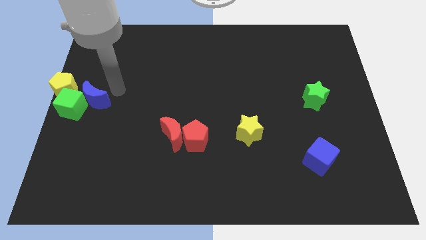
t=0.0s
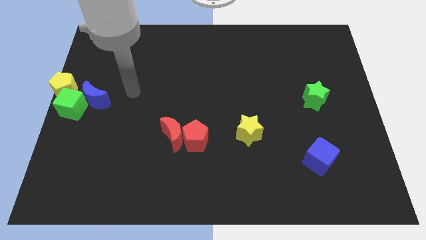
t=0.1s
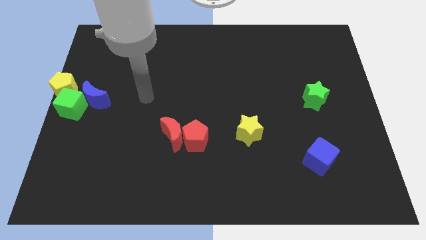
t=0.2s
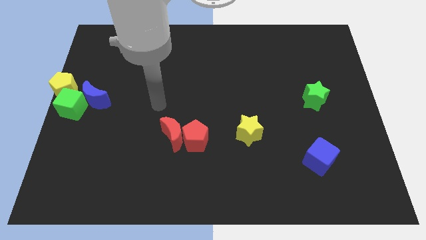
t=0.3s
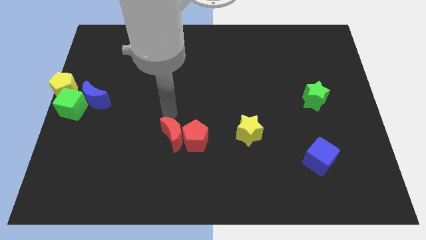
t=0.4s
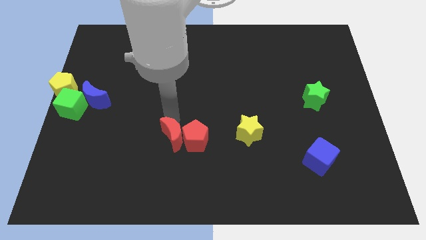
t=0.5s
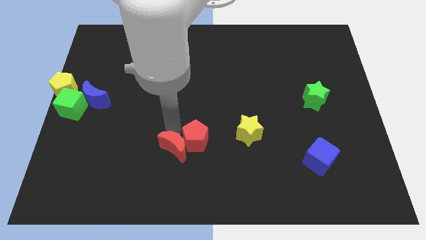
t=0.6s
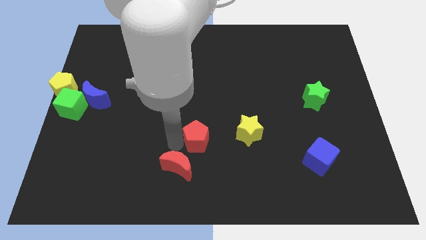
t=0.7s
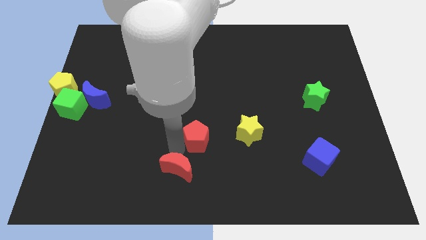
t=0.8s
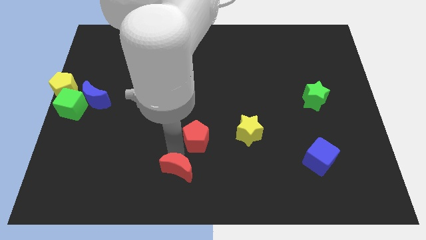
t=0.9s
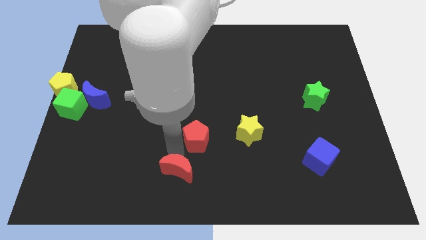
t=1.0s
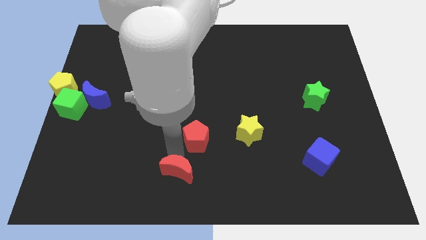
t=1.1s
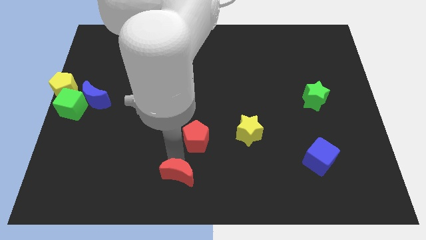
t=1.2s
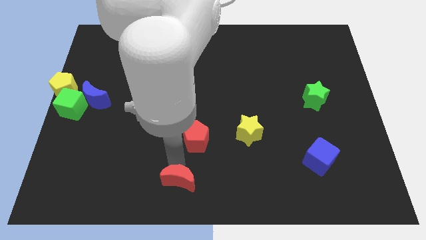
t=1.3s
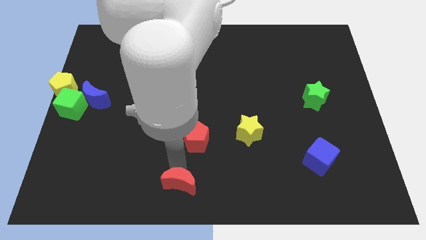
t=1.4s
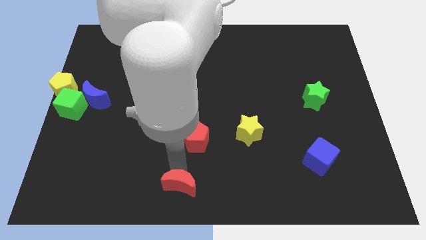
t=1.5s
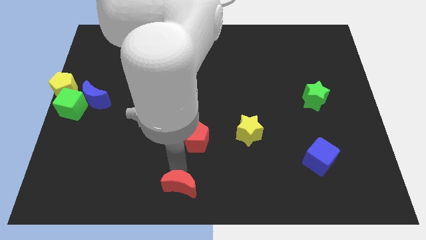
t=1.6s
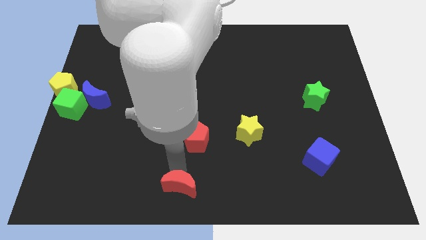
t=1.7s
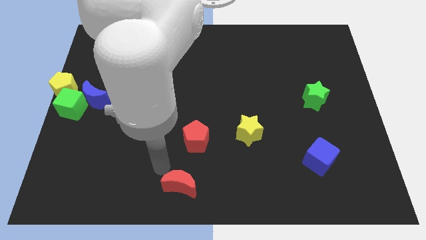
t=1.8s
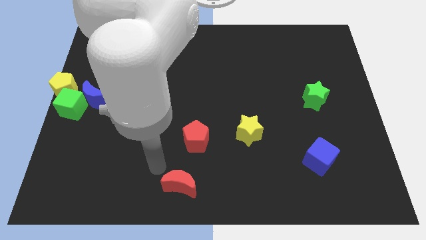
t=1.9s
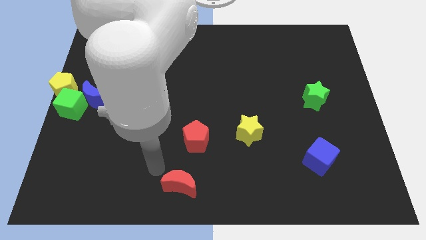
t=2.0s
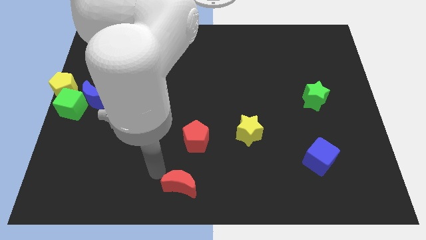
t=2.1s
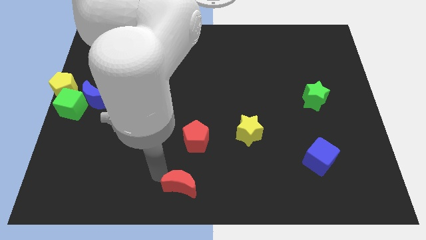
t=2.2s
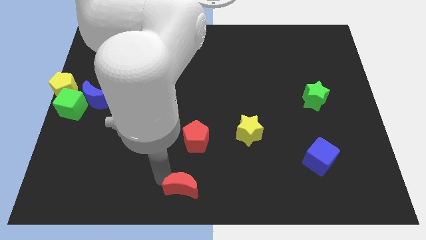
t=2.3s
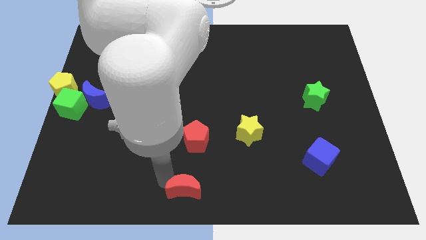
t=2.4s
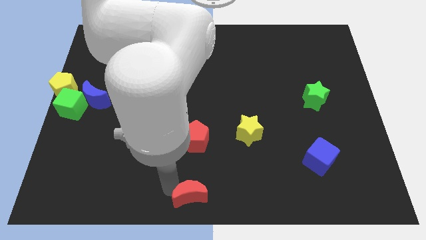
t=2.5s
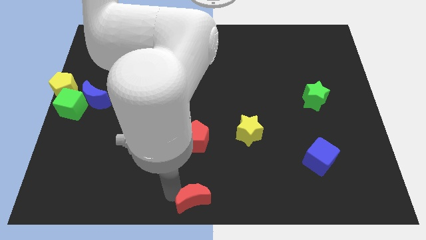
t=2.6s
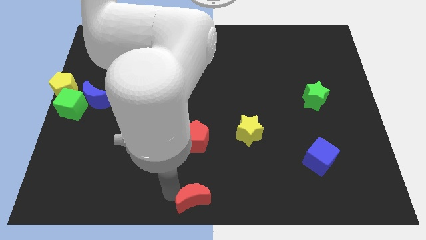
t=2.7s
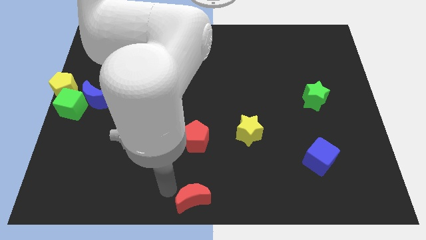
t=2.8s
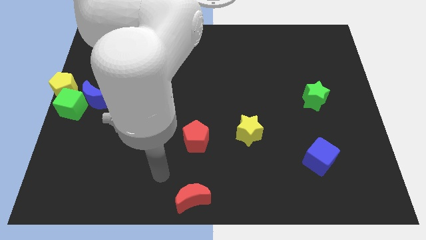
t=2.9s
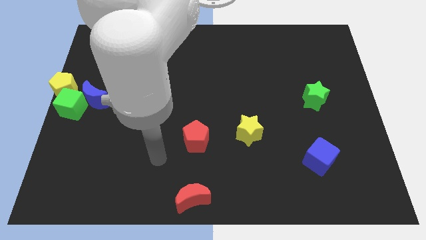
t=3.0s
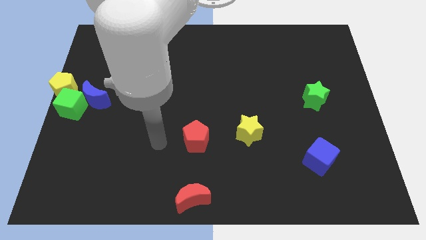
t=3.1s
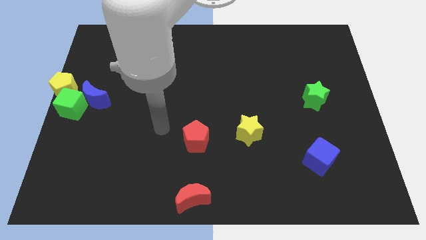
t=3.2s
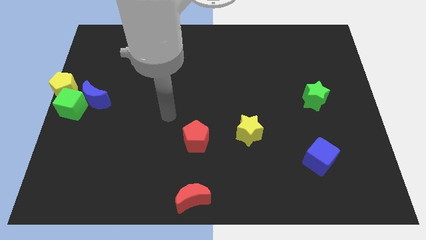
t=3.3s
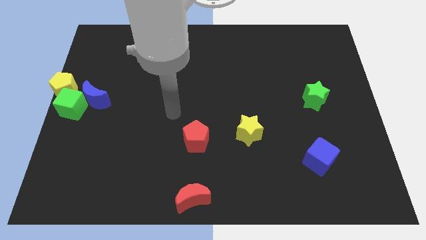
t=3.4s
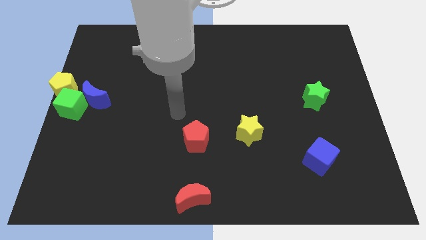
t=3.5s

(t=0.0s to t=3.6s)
separate red moon from red pentagon

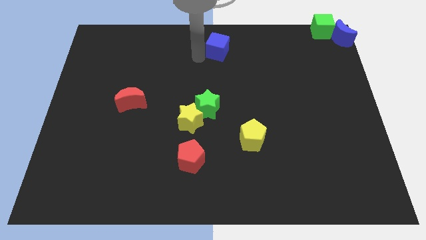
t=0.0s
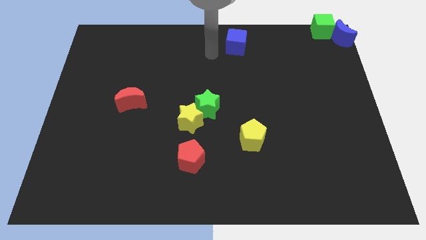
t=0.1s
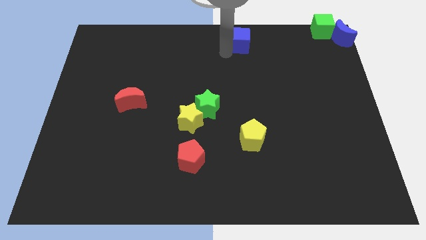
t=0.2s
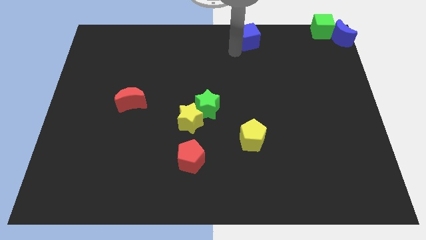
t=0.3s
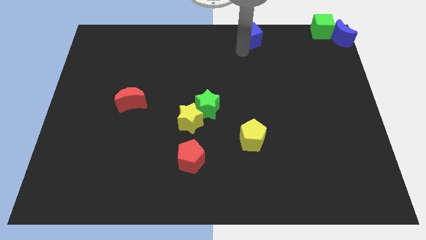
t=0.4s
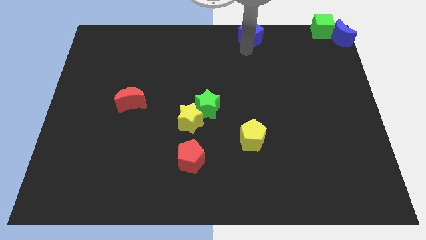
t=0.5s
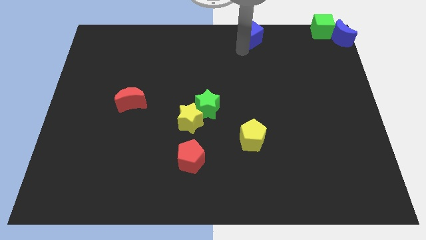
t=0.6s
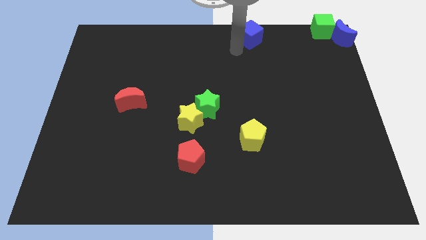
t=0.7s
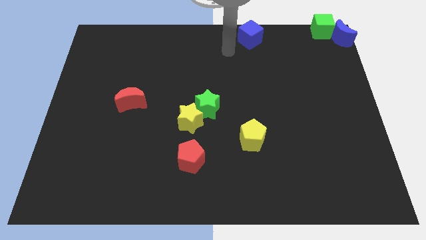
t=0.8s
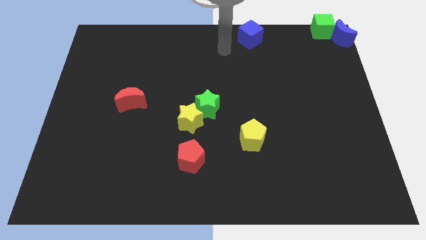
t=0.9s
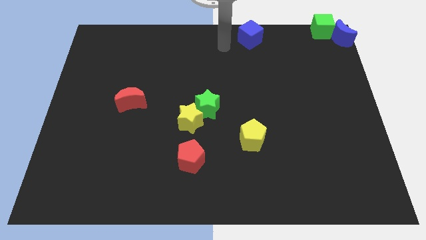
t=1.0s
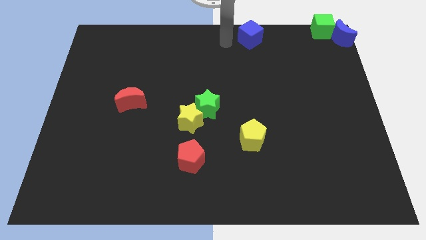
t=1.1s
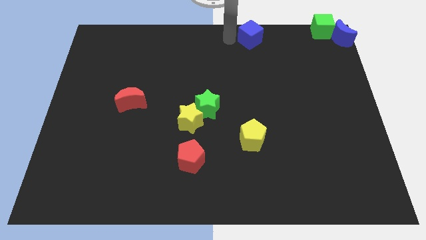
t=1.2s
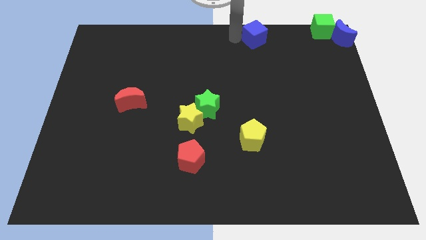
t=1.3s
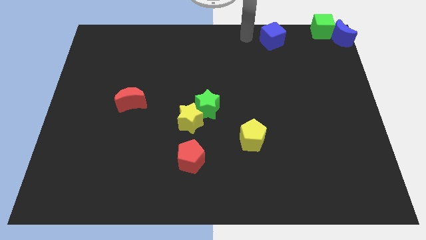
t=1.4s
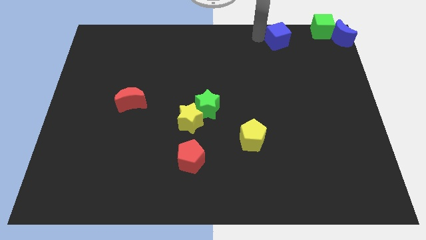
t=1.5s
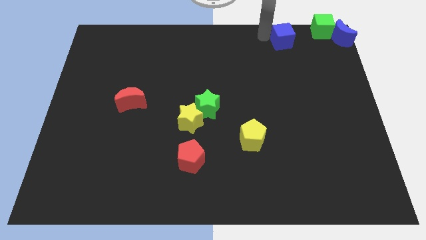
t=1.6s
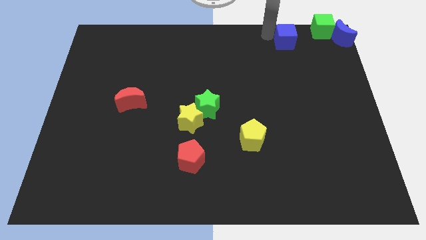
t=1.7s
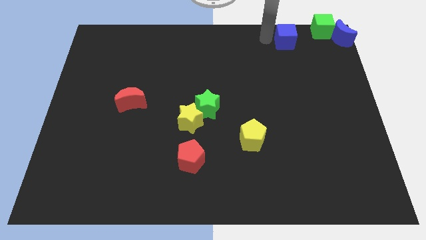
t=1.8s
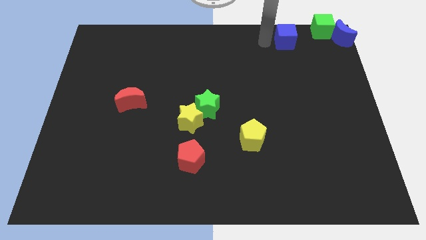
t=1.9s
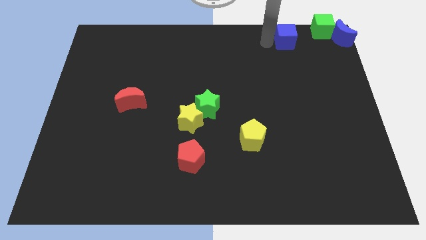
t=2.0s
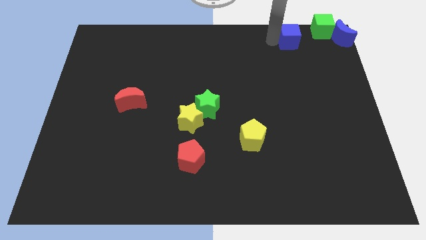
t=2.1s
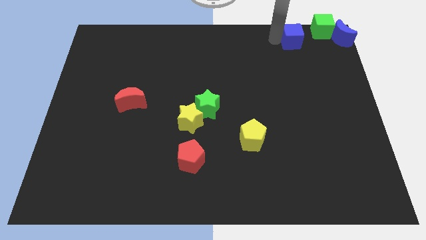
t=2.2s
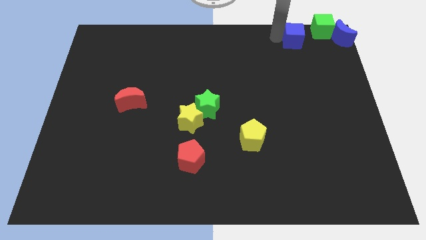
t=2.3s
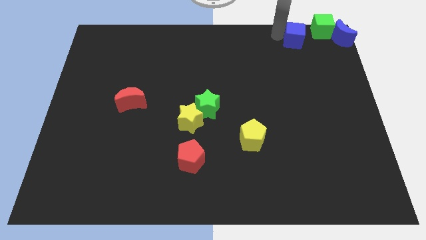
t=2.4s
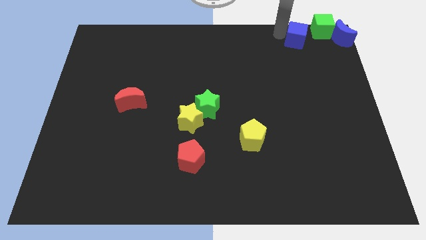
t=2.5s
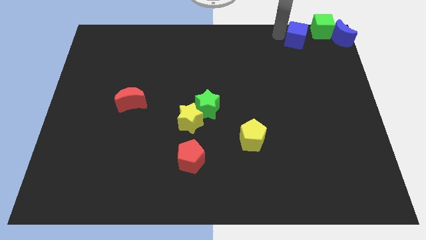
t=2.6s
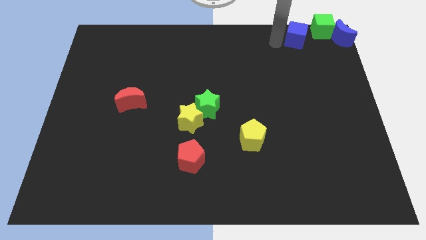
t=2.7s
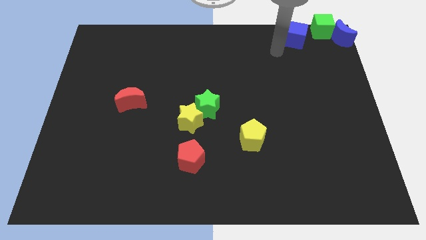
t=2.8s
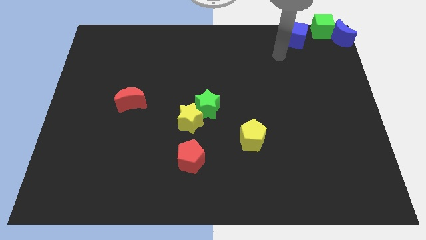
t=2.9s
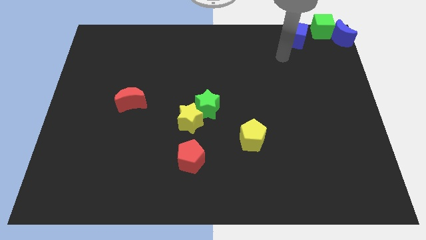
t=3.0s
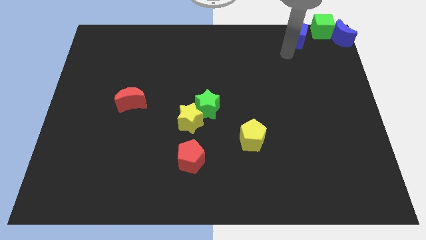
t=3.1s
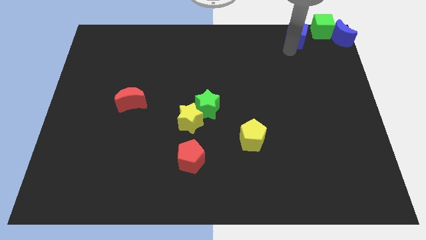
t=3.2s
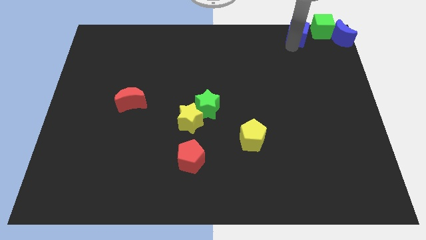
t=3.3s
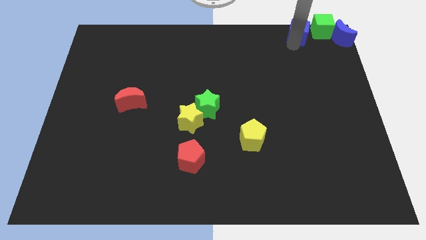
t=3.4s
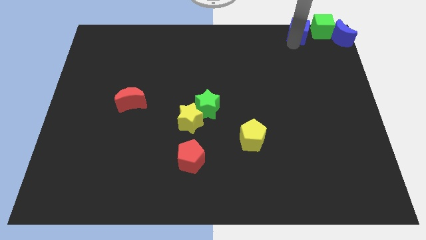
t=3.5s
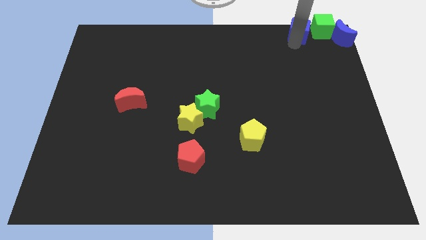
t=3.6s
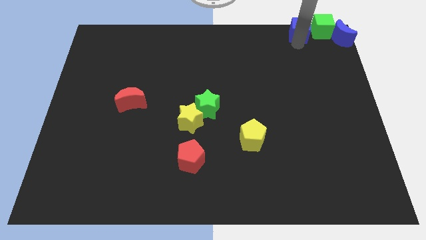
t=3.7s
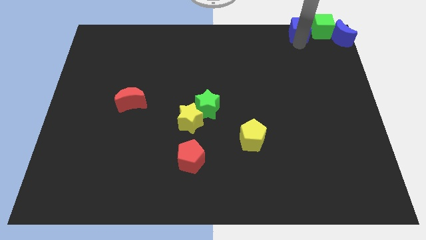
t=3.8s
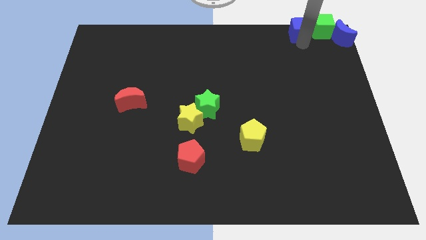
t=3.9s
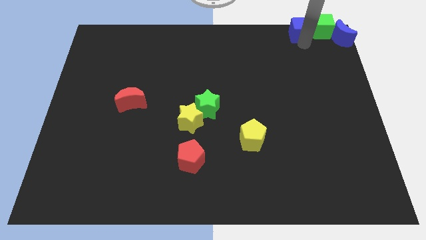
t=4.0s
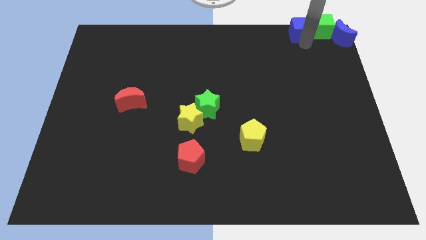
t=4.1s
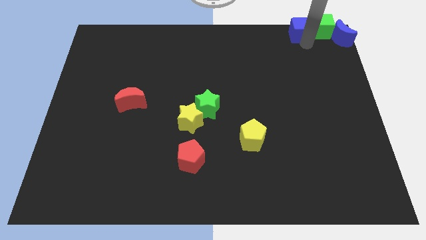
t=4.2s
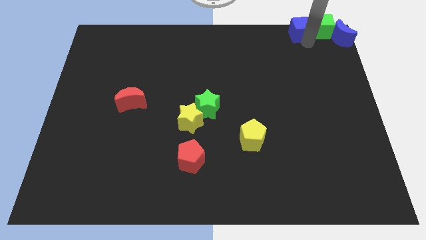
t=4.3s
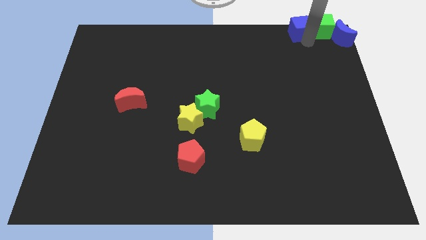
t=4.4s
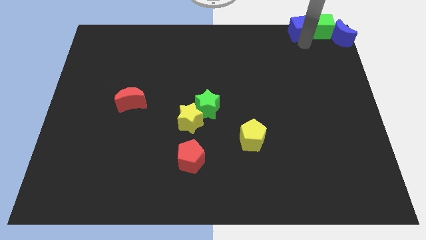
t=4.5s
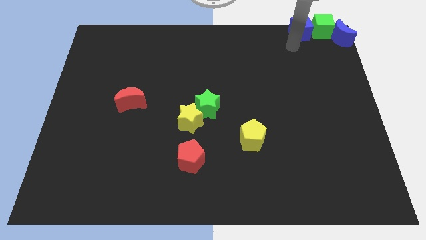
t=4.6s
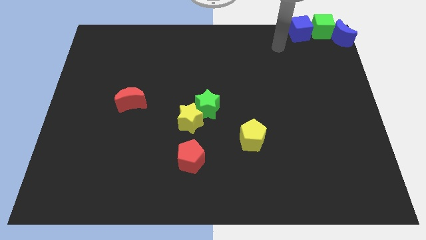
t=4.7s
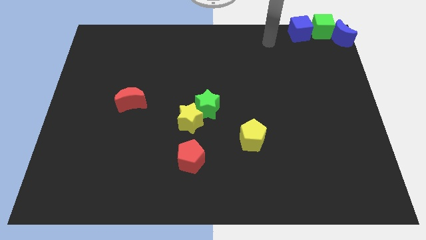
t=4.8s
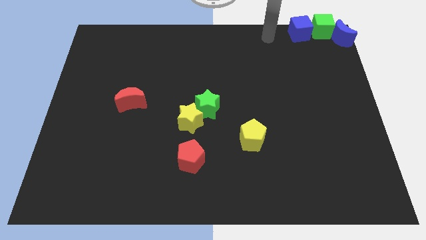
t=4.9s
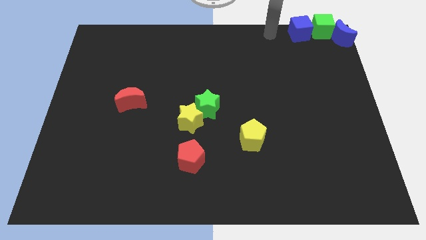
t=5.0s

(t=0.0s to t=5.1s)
slide the blue cube to the left side of the green cube

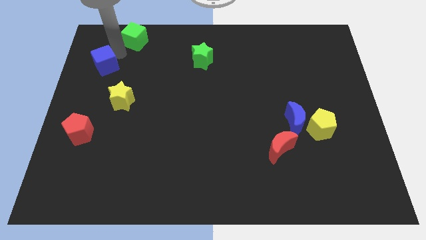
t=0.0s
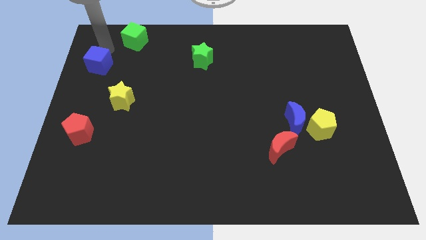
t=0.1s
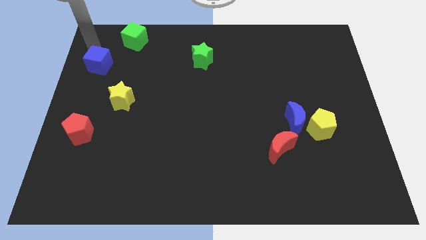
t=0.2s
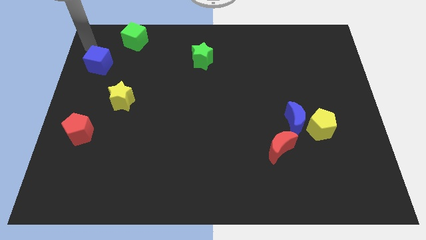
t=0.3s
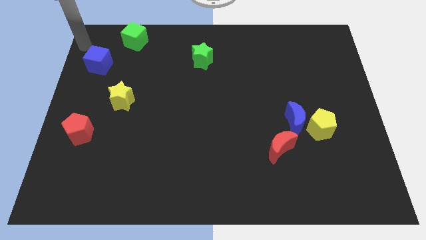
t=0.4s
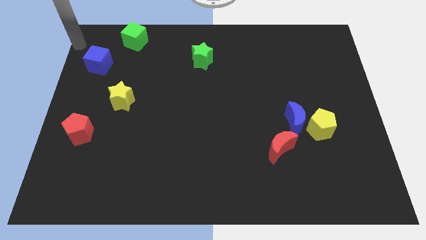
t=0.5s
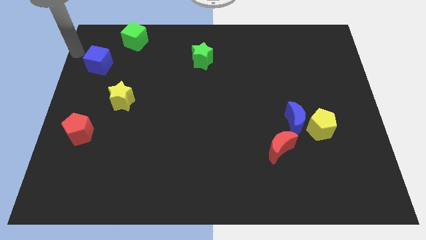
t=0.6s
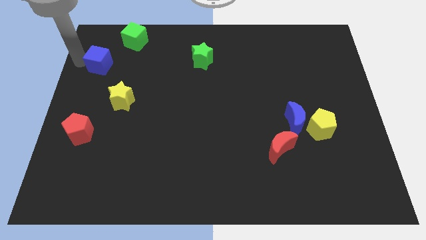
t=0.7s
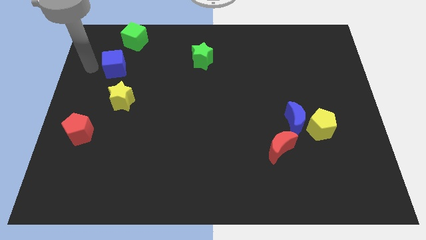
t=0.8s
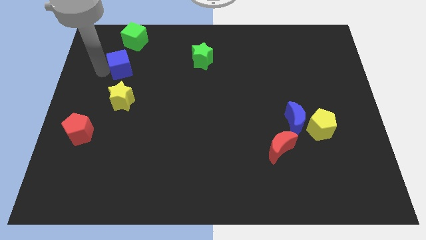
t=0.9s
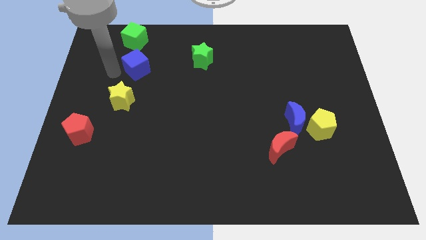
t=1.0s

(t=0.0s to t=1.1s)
push blue cube vertical to yellow star
